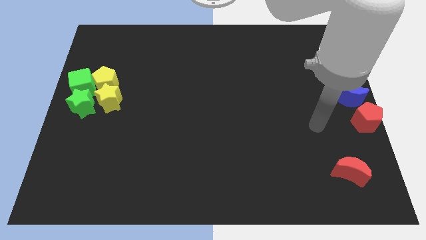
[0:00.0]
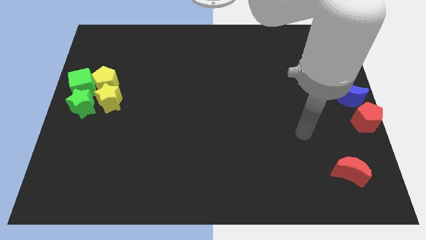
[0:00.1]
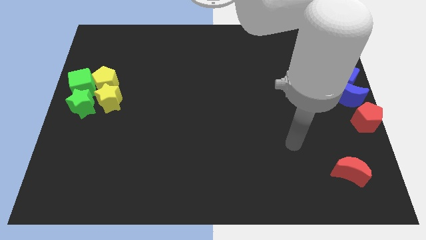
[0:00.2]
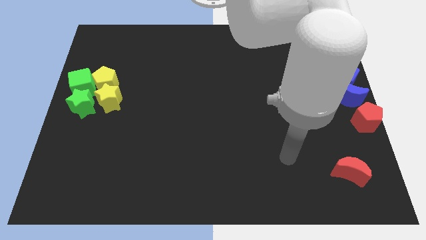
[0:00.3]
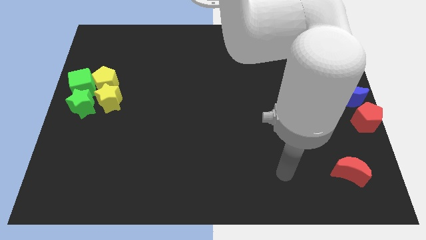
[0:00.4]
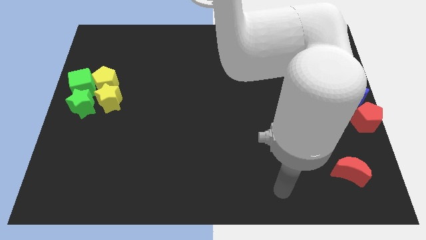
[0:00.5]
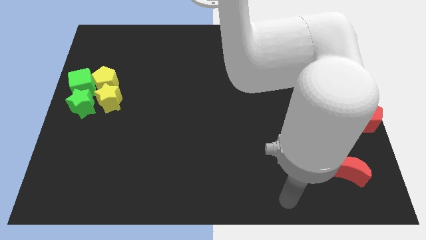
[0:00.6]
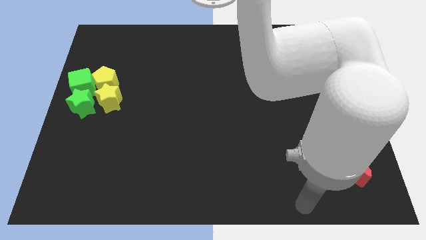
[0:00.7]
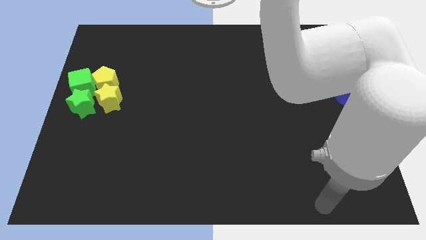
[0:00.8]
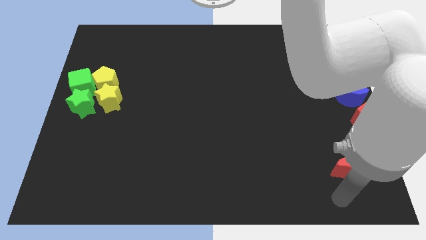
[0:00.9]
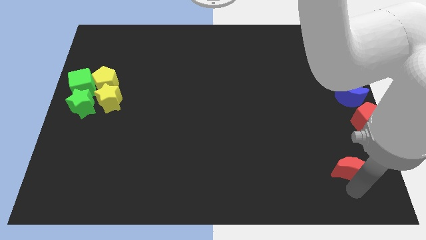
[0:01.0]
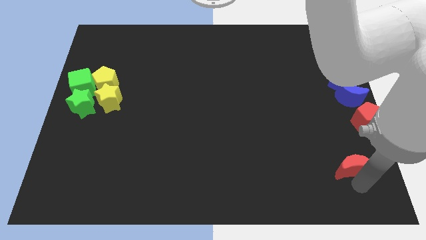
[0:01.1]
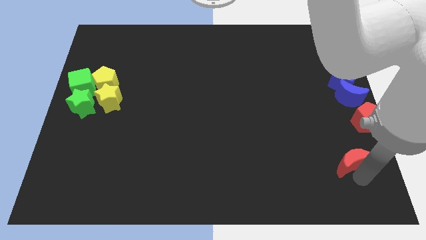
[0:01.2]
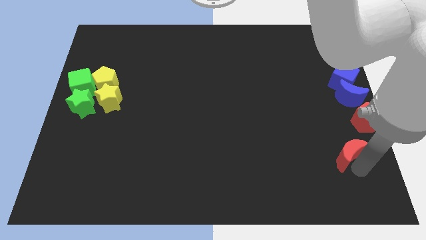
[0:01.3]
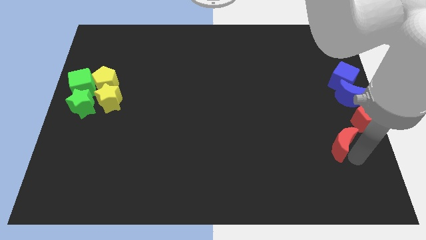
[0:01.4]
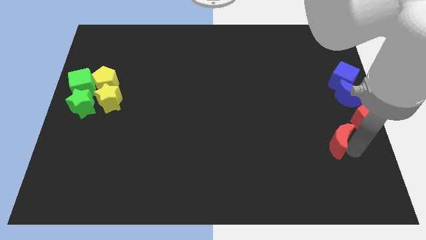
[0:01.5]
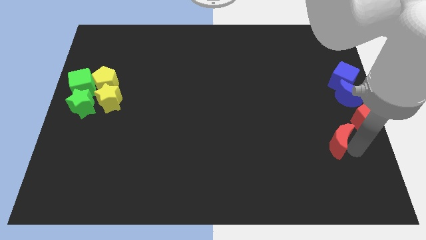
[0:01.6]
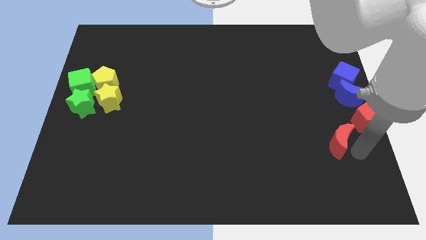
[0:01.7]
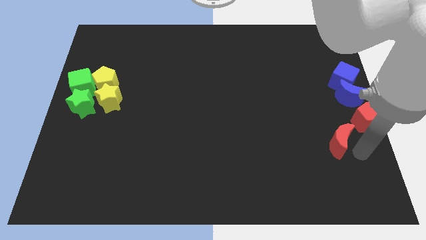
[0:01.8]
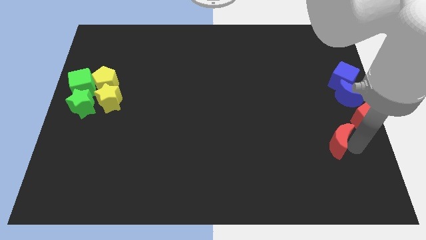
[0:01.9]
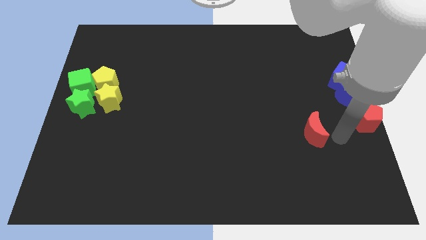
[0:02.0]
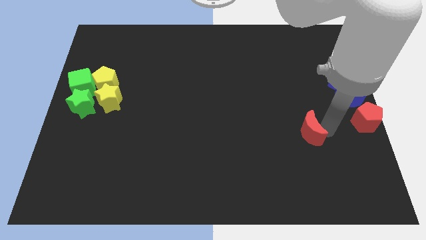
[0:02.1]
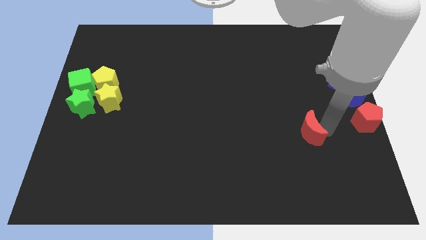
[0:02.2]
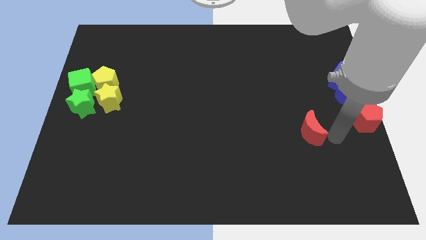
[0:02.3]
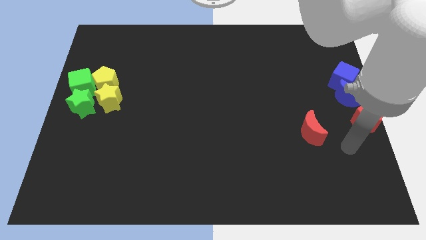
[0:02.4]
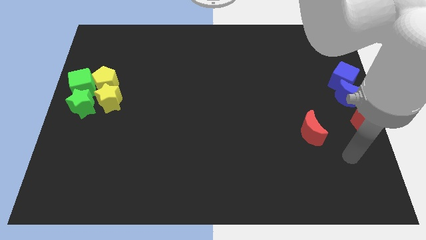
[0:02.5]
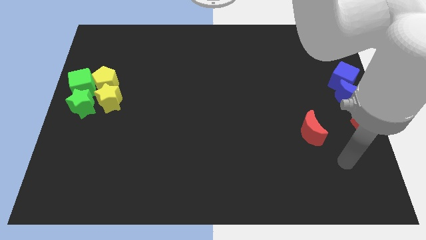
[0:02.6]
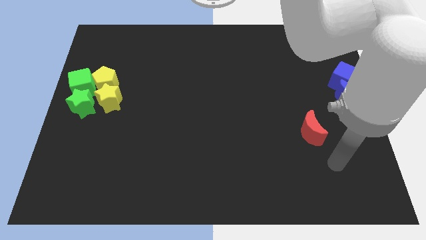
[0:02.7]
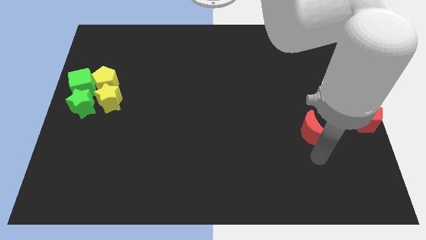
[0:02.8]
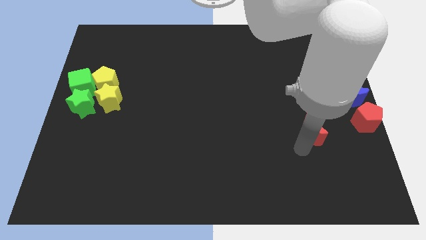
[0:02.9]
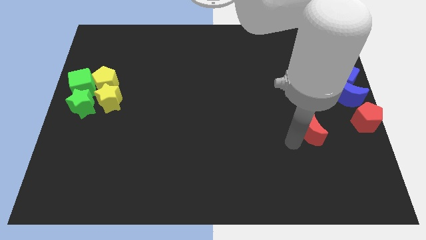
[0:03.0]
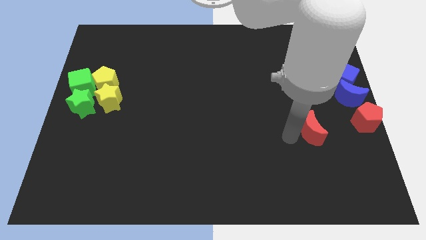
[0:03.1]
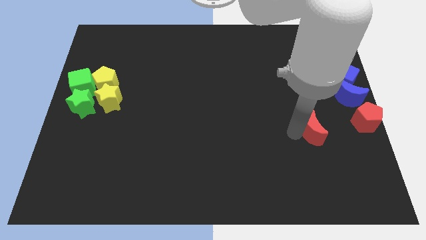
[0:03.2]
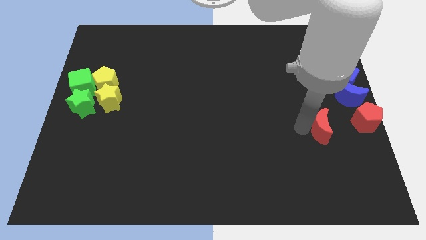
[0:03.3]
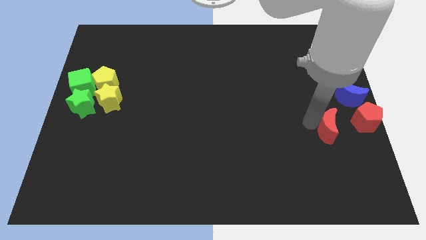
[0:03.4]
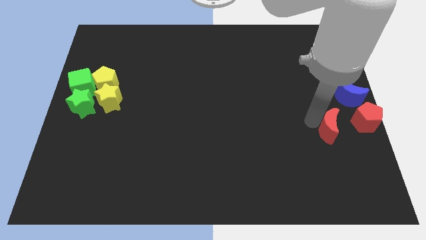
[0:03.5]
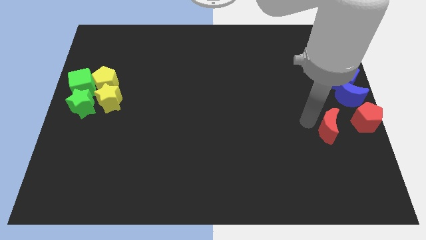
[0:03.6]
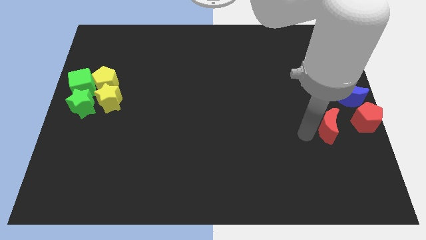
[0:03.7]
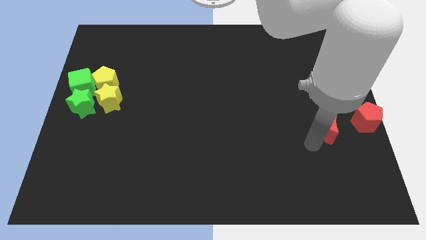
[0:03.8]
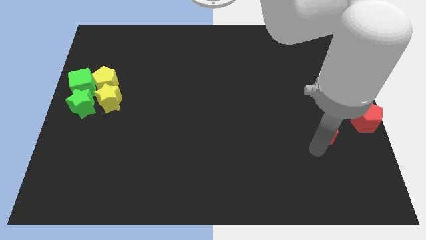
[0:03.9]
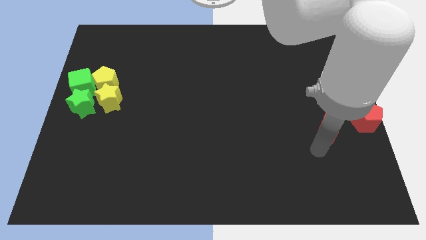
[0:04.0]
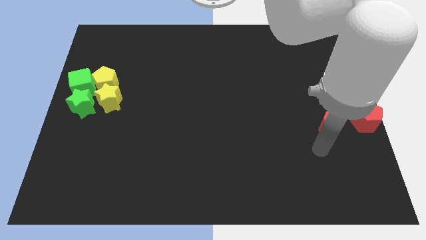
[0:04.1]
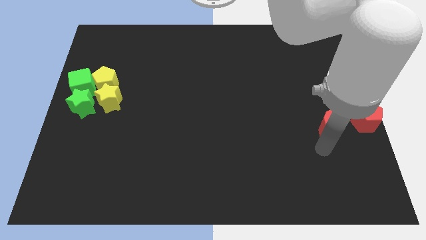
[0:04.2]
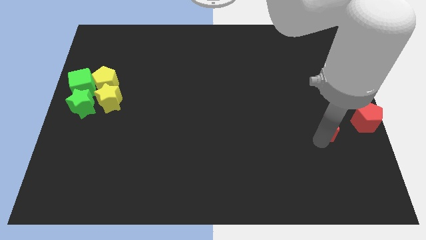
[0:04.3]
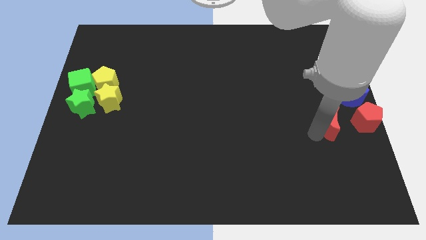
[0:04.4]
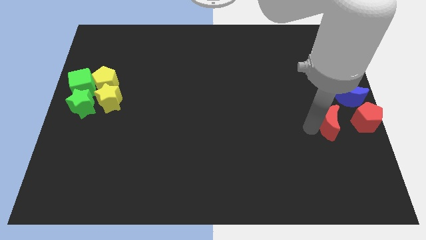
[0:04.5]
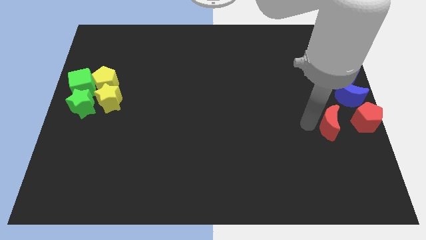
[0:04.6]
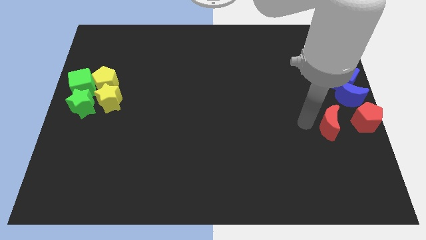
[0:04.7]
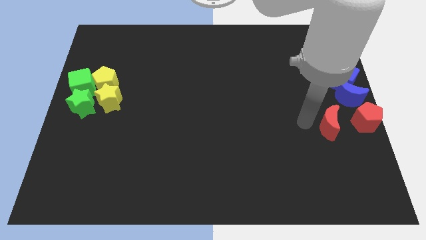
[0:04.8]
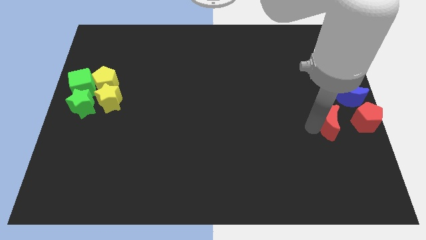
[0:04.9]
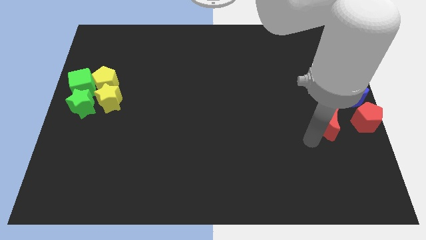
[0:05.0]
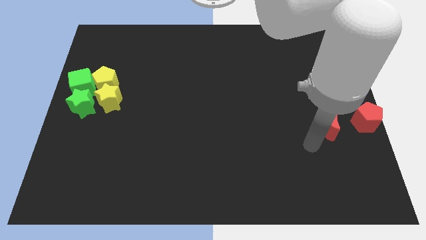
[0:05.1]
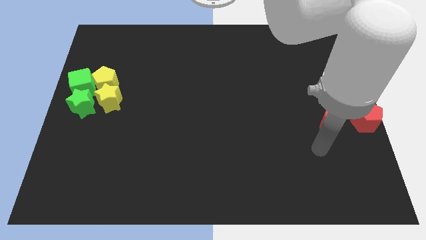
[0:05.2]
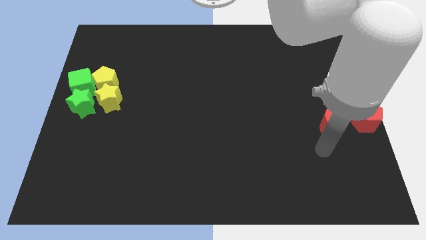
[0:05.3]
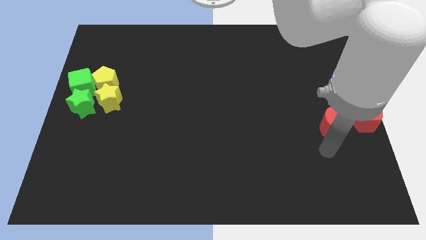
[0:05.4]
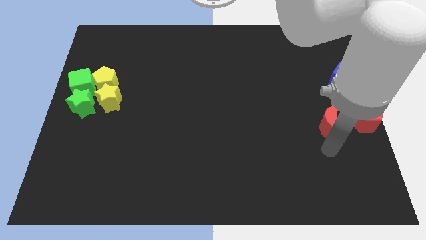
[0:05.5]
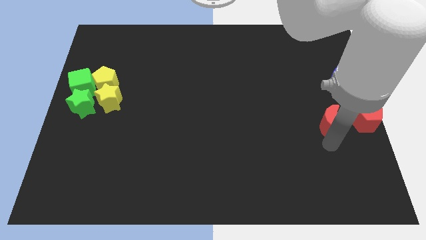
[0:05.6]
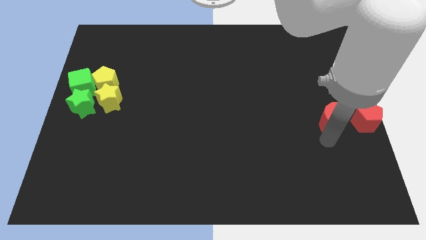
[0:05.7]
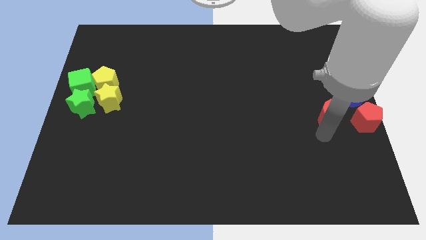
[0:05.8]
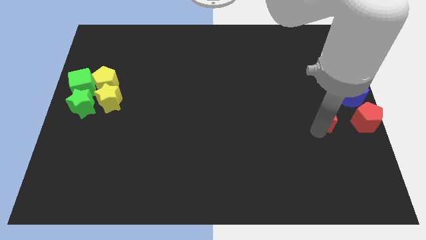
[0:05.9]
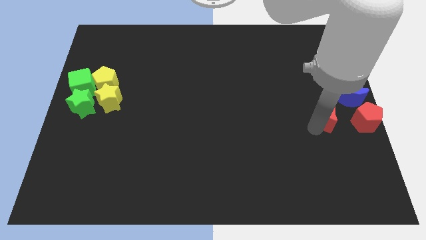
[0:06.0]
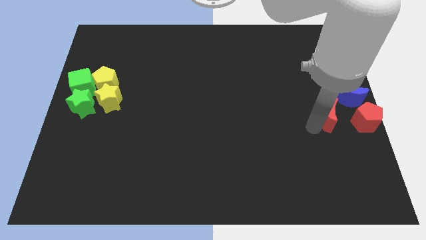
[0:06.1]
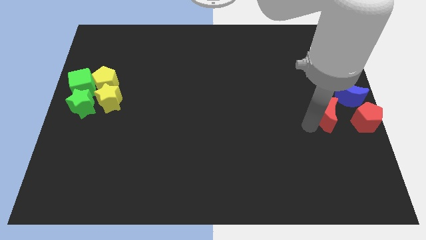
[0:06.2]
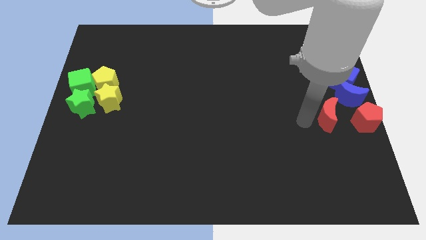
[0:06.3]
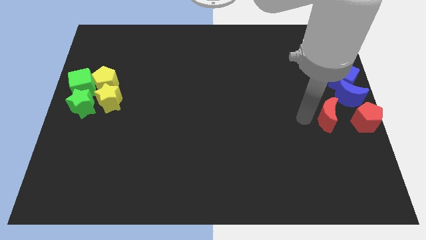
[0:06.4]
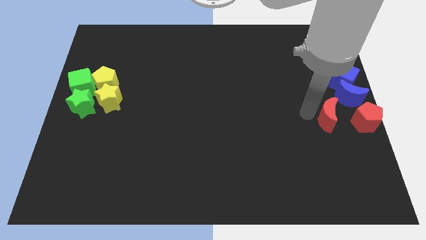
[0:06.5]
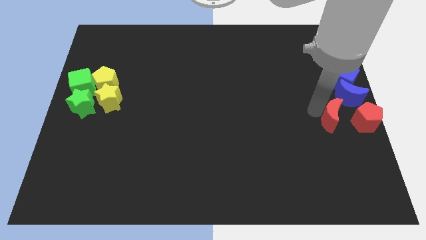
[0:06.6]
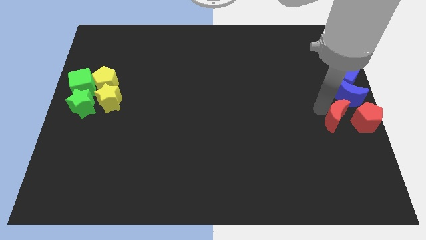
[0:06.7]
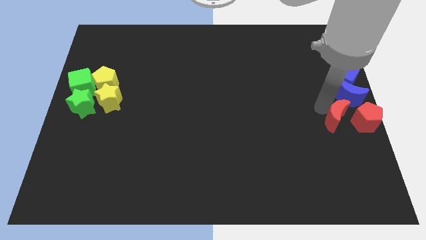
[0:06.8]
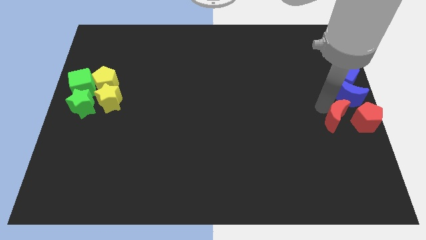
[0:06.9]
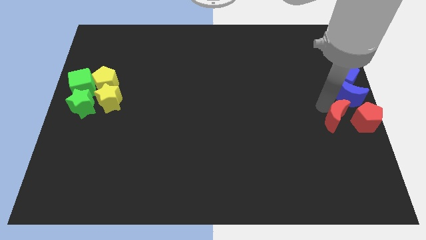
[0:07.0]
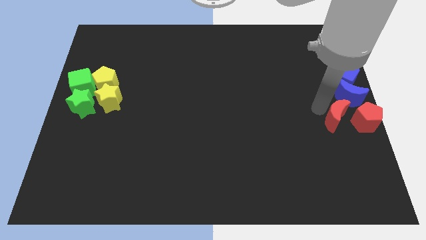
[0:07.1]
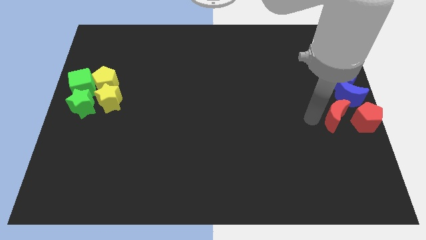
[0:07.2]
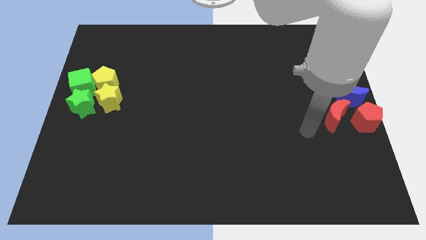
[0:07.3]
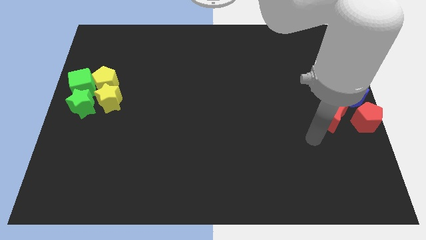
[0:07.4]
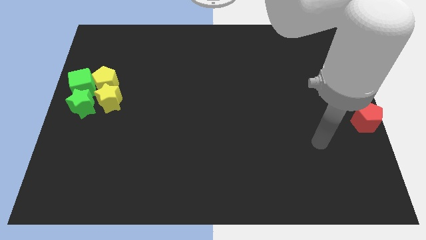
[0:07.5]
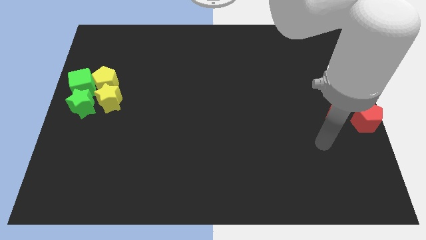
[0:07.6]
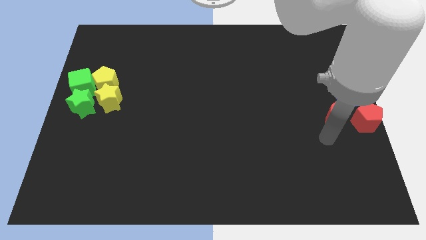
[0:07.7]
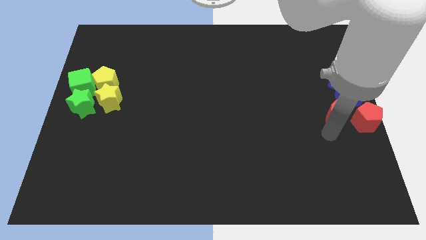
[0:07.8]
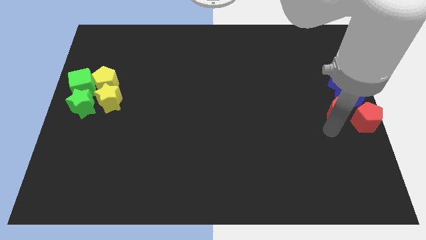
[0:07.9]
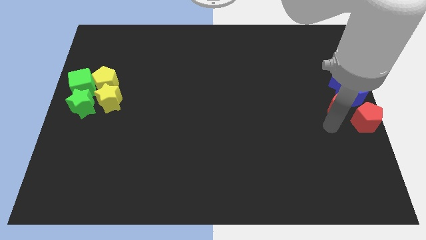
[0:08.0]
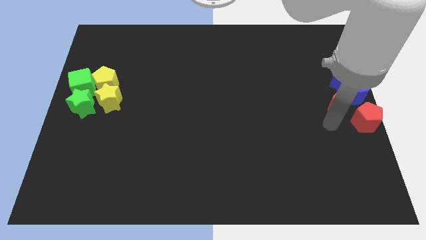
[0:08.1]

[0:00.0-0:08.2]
push the red crescent towards the blue crescent

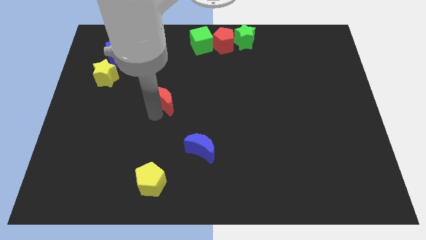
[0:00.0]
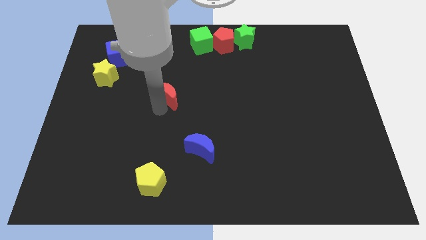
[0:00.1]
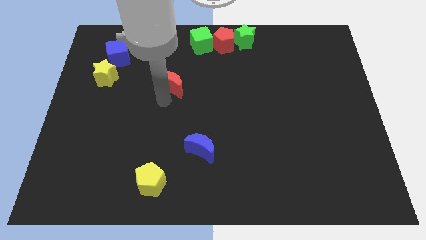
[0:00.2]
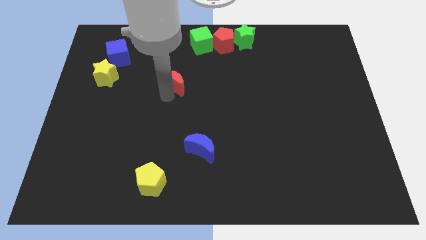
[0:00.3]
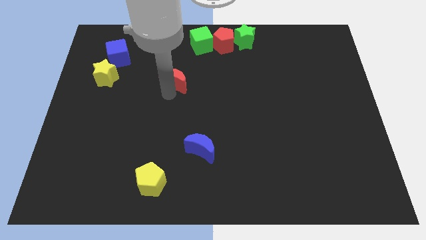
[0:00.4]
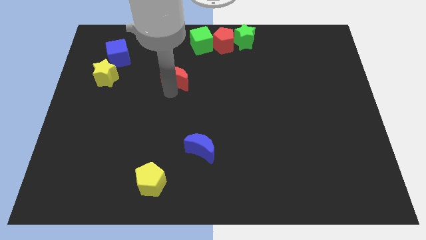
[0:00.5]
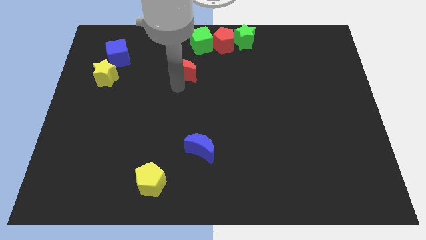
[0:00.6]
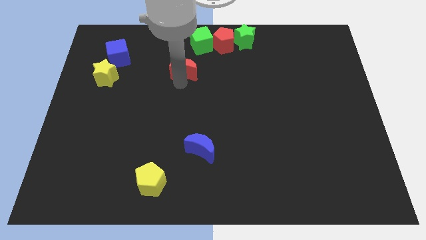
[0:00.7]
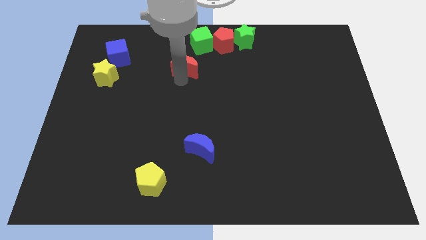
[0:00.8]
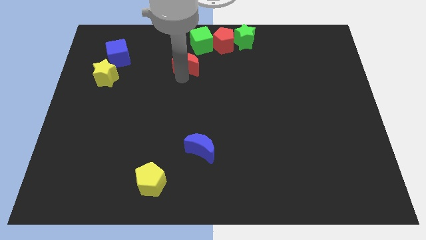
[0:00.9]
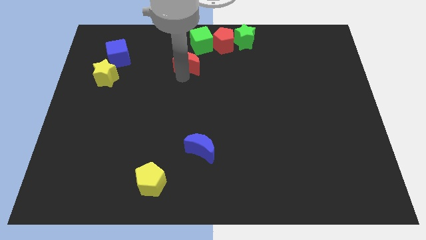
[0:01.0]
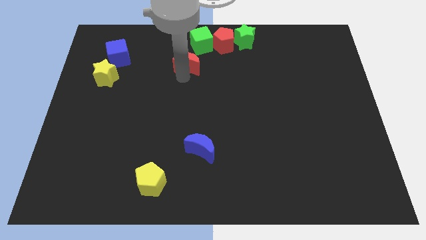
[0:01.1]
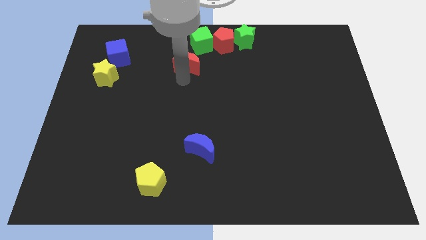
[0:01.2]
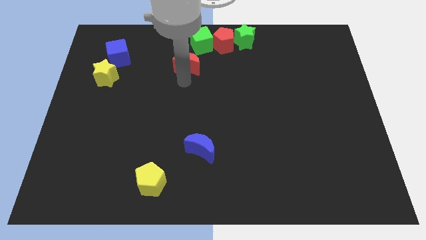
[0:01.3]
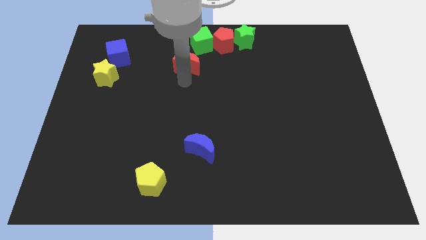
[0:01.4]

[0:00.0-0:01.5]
move the red moon close to the green cube
